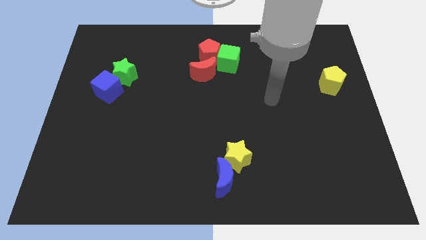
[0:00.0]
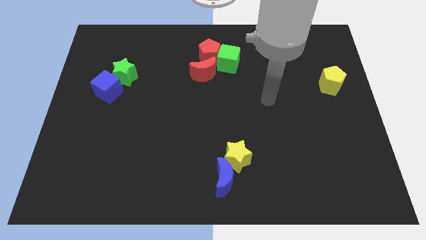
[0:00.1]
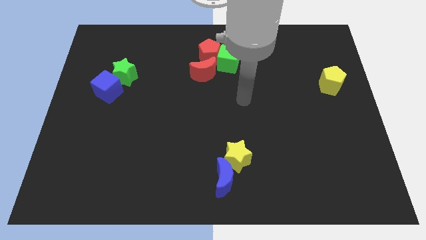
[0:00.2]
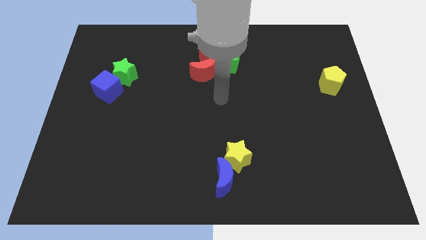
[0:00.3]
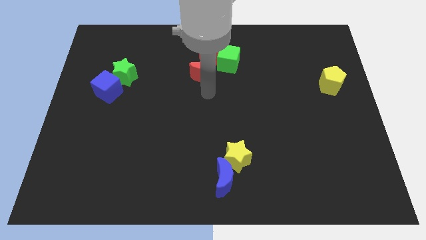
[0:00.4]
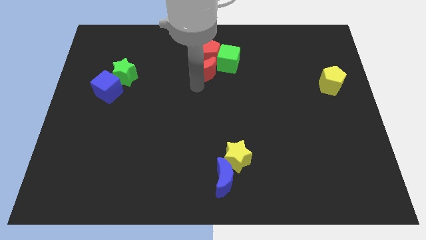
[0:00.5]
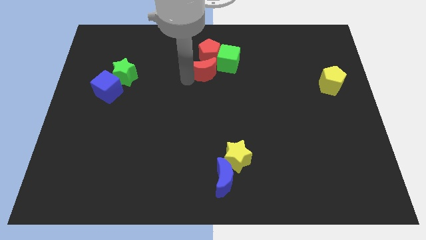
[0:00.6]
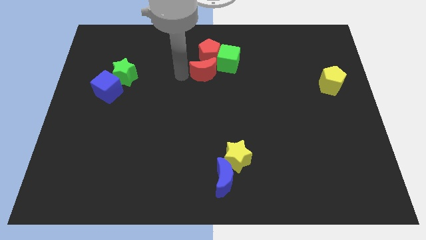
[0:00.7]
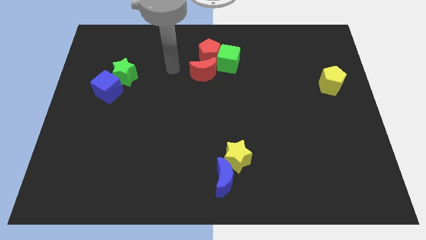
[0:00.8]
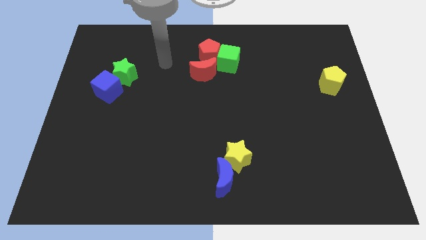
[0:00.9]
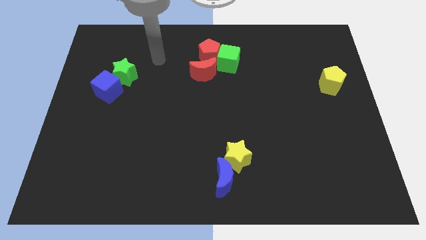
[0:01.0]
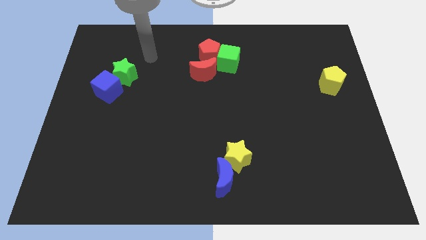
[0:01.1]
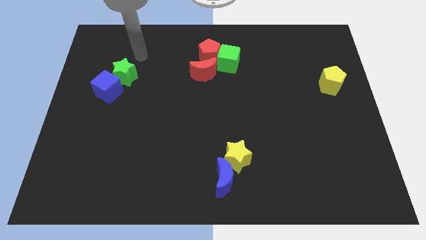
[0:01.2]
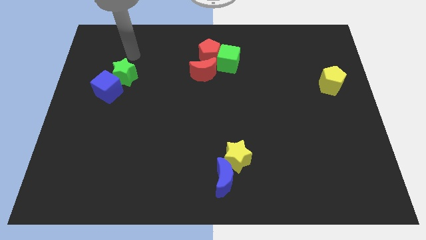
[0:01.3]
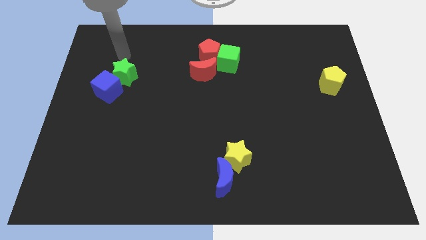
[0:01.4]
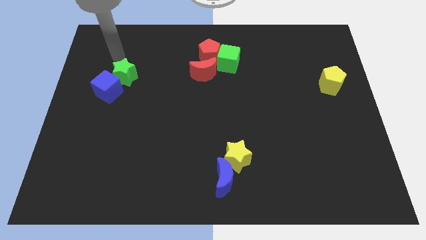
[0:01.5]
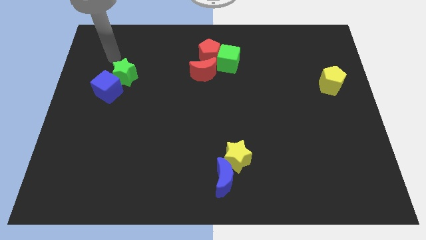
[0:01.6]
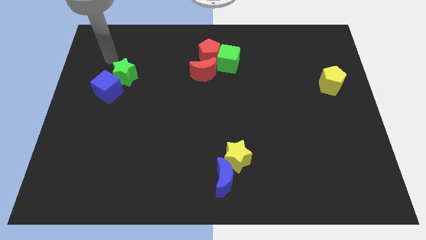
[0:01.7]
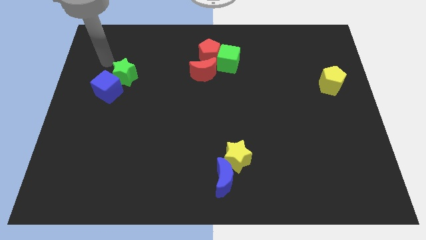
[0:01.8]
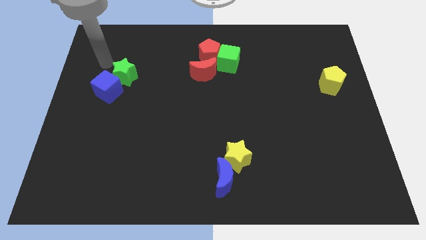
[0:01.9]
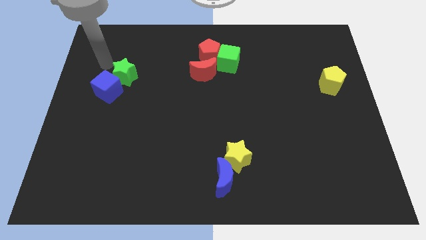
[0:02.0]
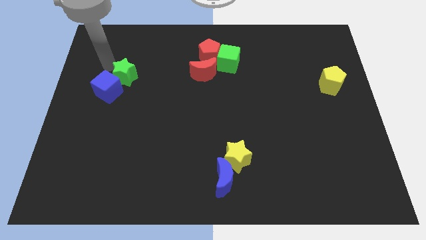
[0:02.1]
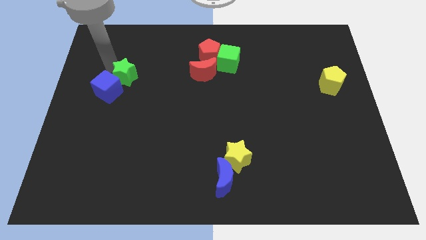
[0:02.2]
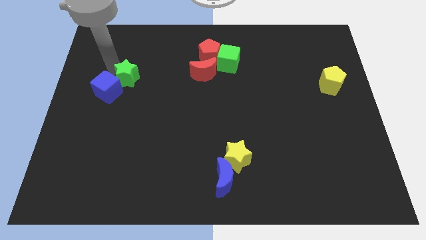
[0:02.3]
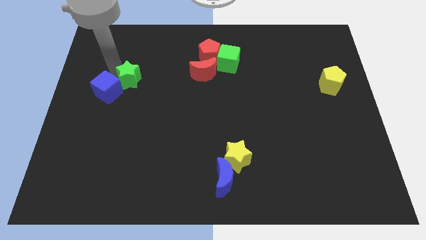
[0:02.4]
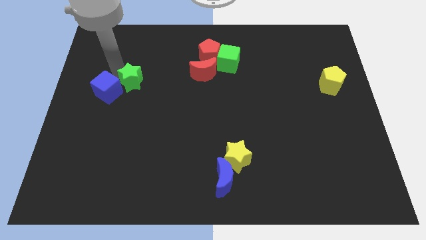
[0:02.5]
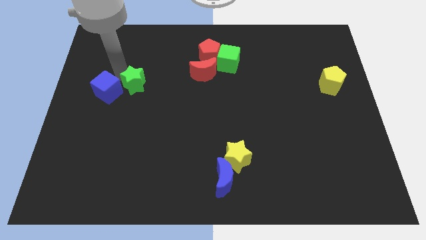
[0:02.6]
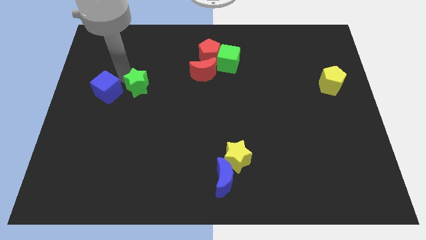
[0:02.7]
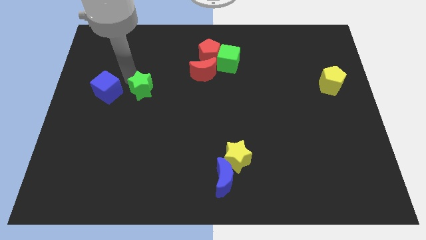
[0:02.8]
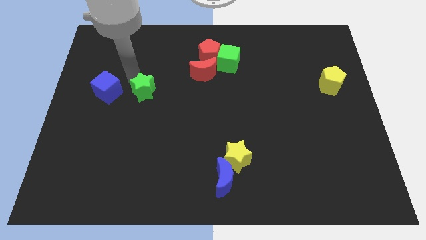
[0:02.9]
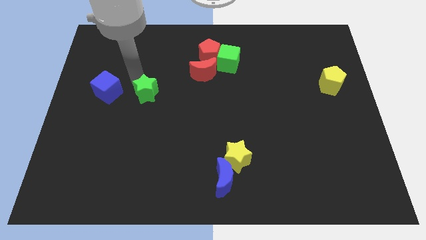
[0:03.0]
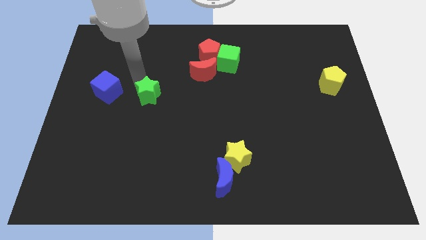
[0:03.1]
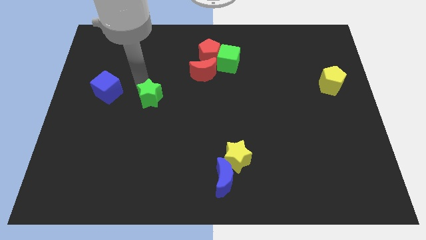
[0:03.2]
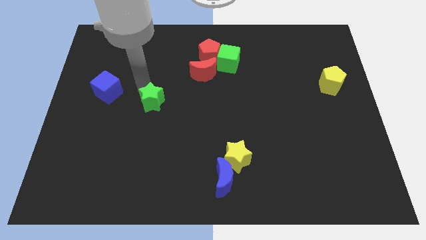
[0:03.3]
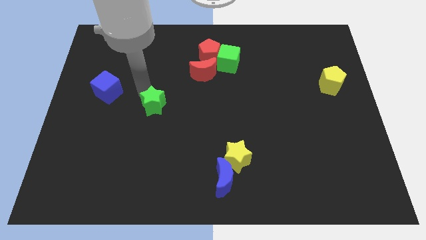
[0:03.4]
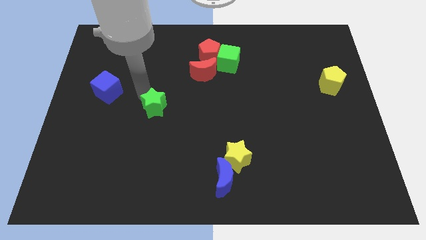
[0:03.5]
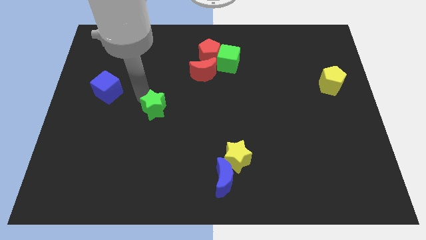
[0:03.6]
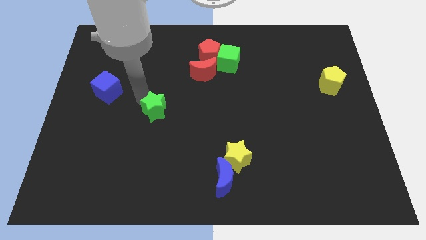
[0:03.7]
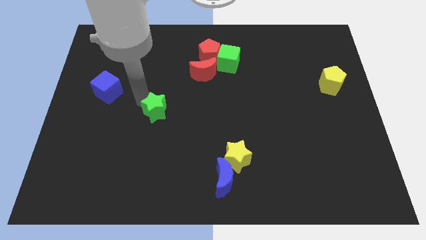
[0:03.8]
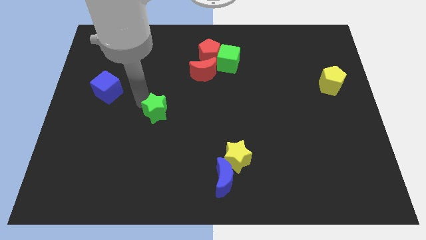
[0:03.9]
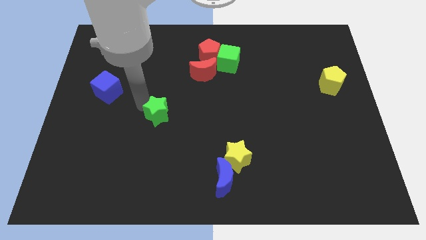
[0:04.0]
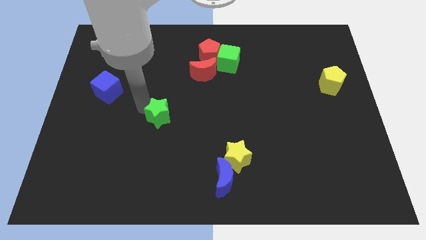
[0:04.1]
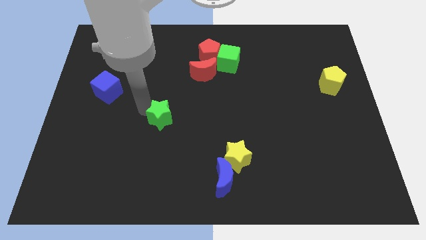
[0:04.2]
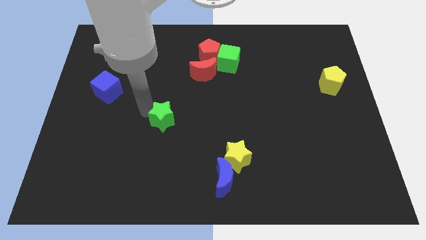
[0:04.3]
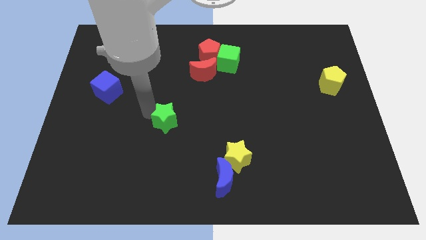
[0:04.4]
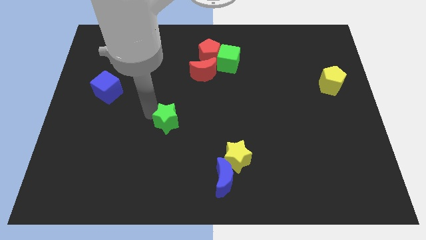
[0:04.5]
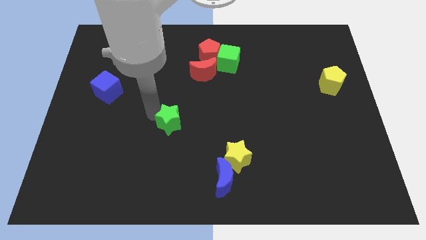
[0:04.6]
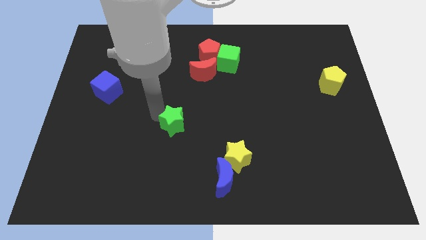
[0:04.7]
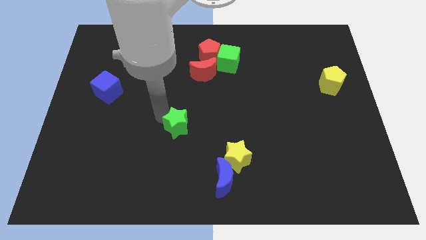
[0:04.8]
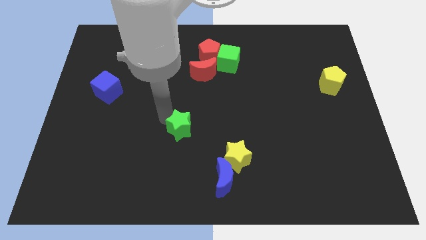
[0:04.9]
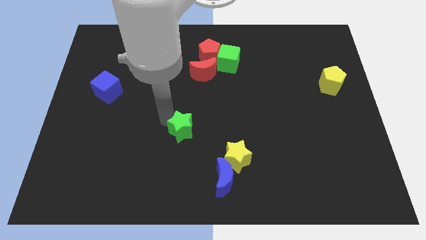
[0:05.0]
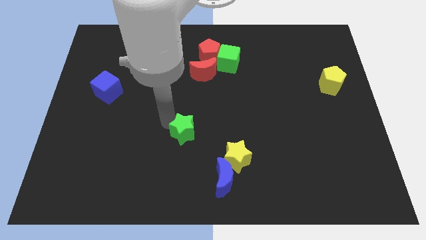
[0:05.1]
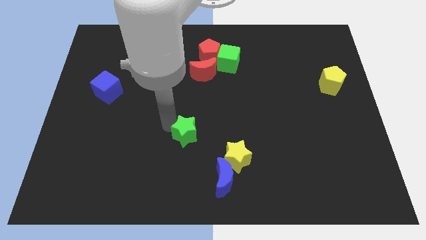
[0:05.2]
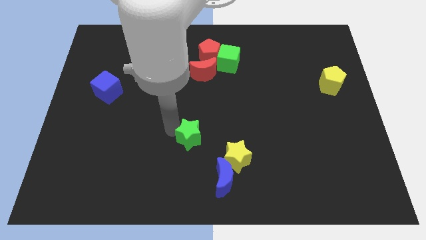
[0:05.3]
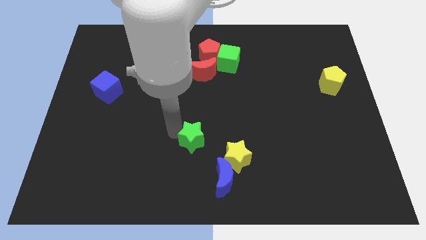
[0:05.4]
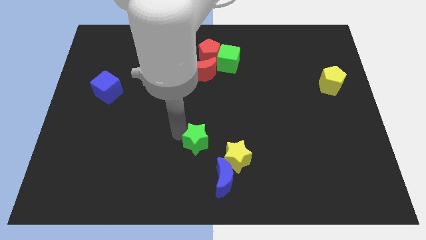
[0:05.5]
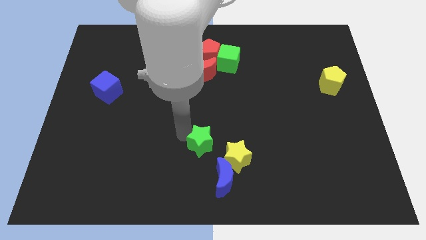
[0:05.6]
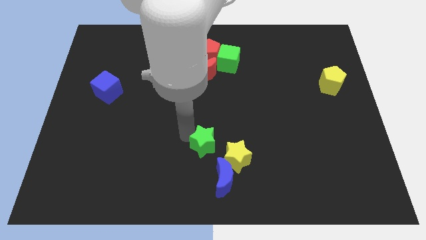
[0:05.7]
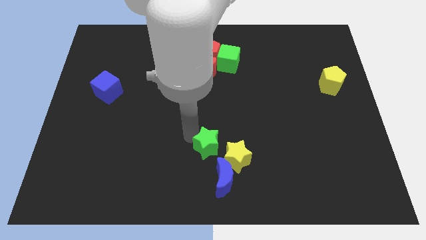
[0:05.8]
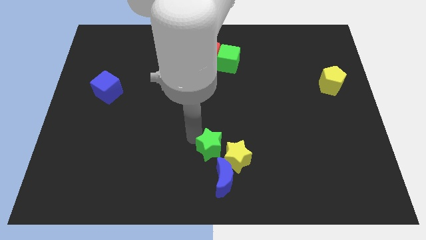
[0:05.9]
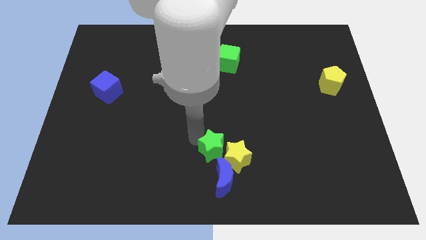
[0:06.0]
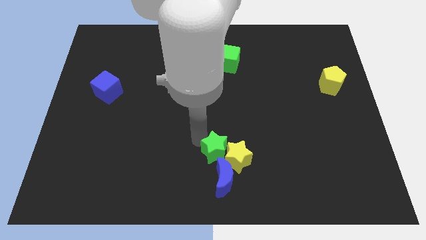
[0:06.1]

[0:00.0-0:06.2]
put the green star close to the yellow star

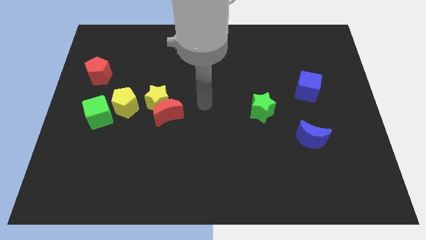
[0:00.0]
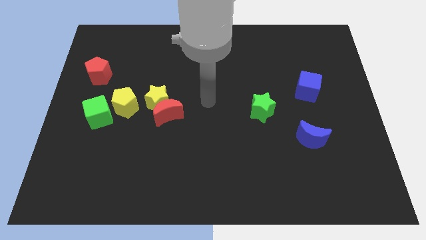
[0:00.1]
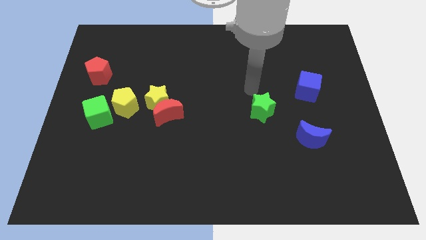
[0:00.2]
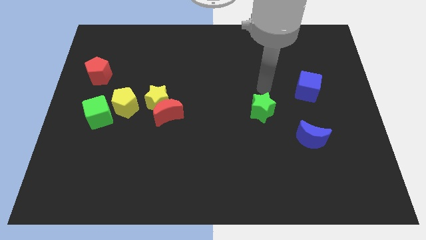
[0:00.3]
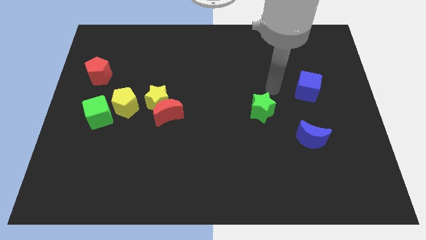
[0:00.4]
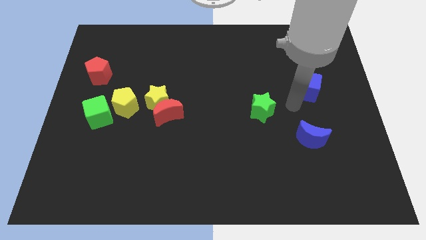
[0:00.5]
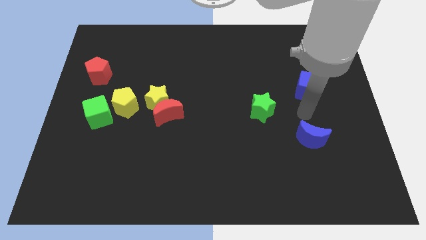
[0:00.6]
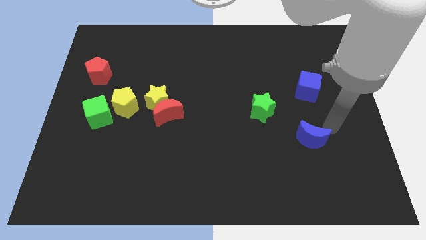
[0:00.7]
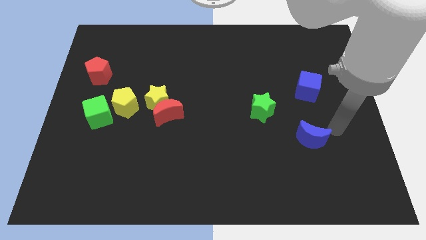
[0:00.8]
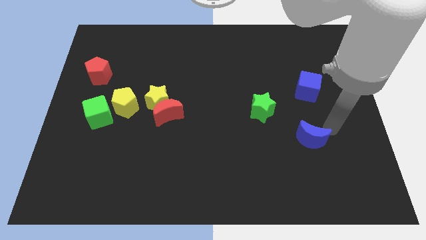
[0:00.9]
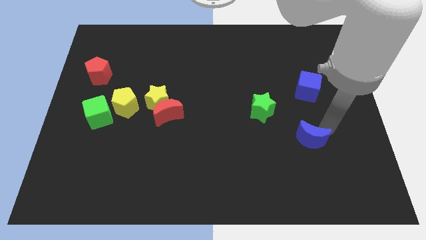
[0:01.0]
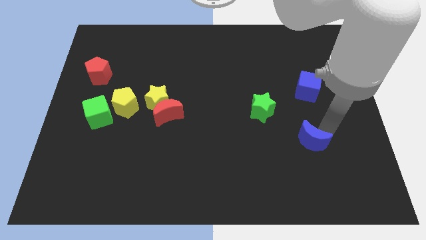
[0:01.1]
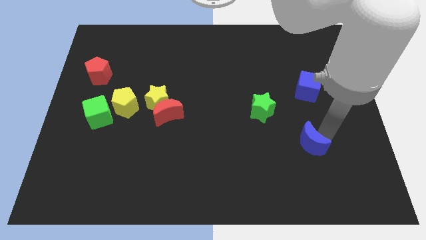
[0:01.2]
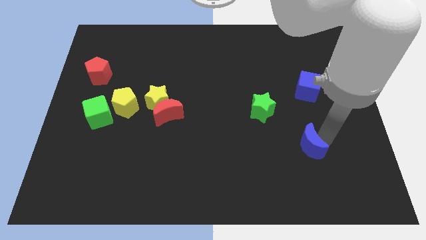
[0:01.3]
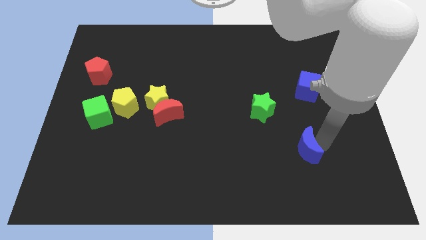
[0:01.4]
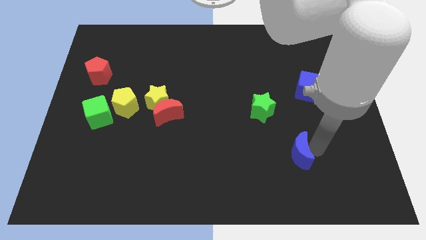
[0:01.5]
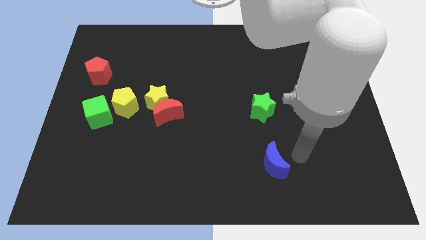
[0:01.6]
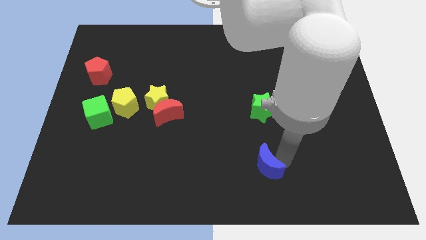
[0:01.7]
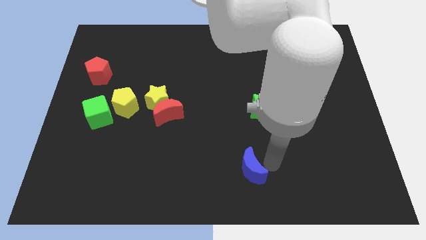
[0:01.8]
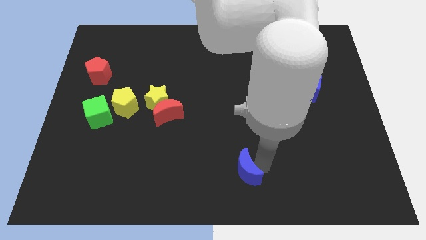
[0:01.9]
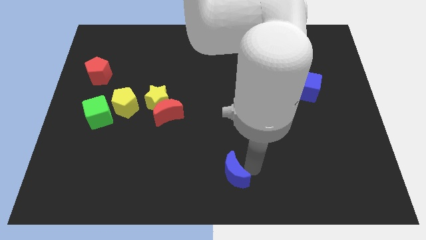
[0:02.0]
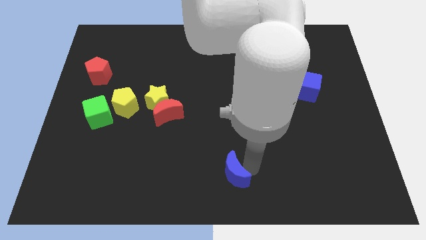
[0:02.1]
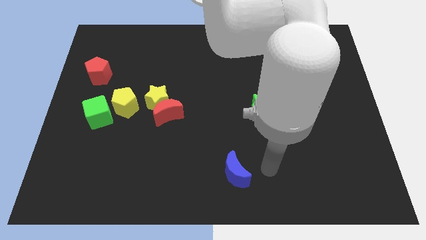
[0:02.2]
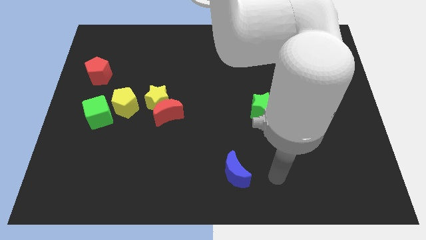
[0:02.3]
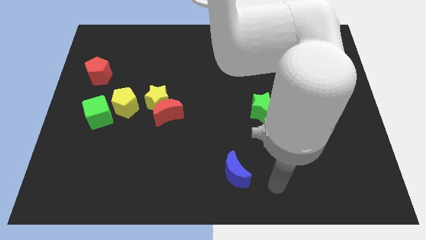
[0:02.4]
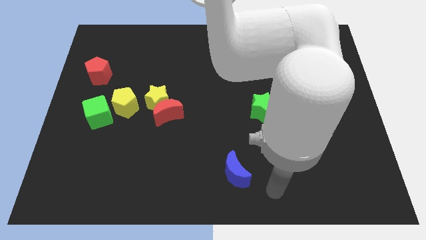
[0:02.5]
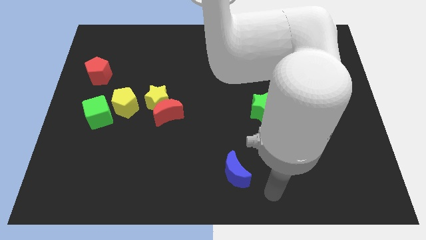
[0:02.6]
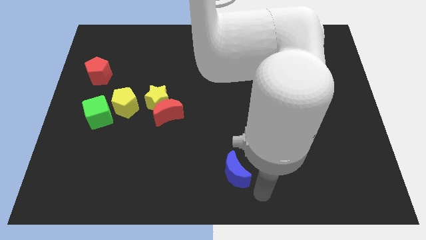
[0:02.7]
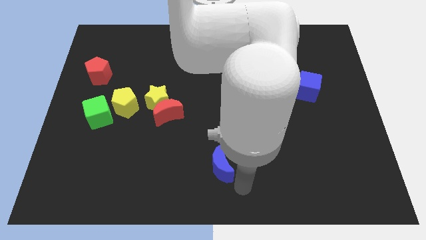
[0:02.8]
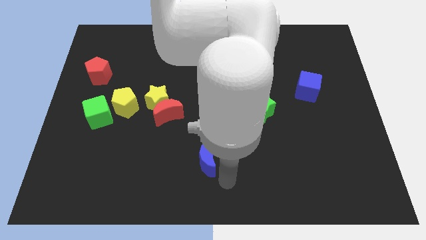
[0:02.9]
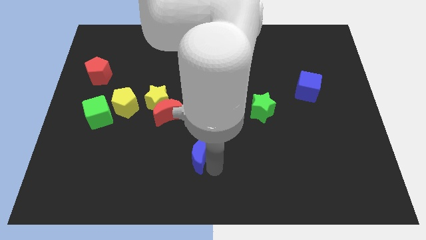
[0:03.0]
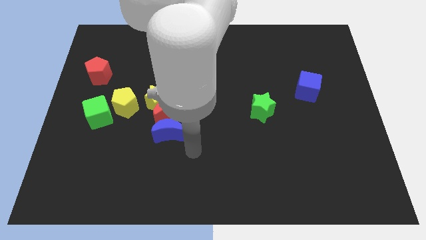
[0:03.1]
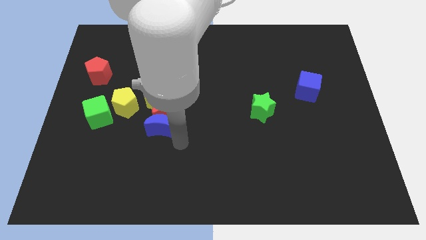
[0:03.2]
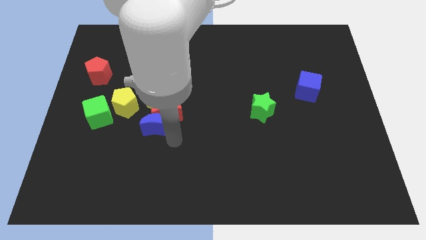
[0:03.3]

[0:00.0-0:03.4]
move the blue moon to the red moon
